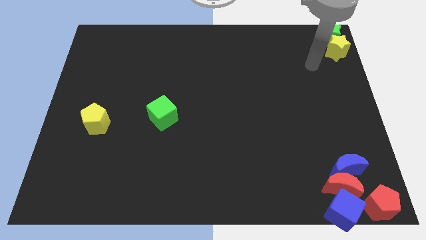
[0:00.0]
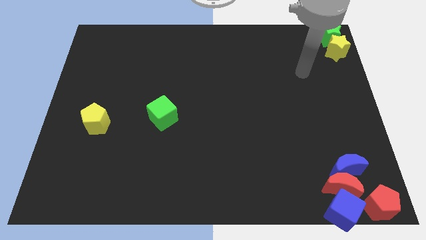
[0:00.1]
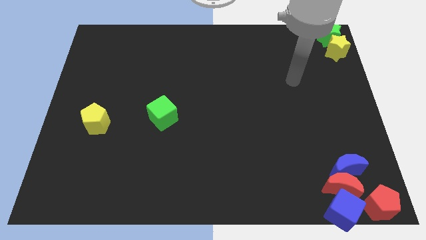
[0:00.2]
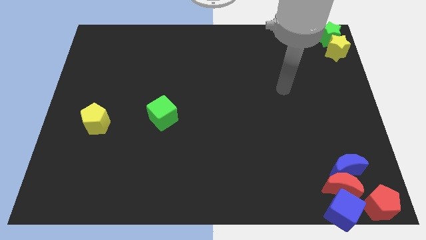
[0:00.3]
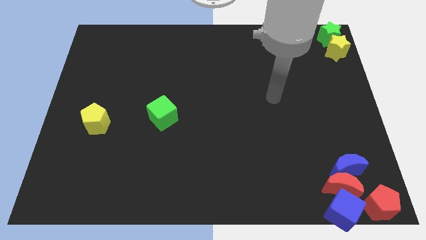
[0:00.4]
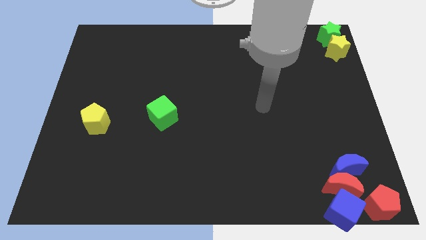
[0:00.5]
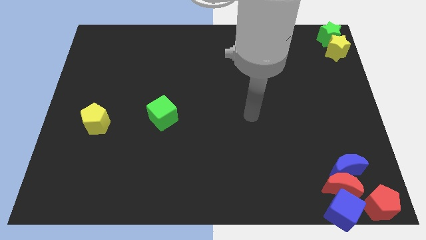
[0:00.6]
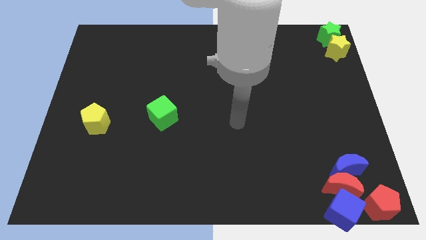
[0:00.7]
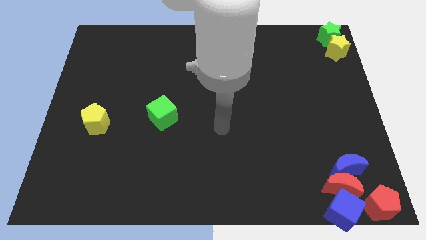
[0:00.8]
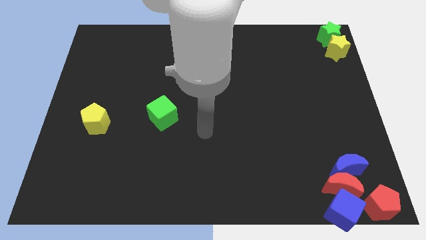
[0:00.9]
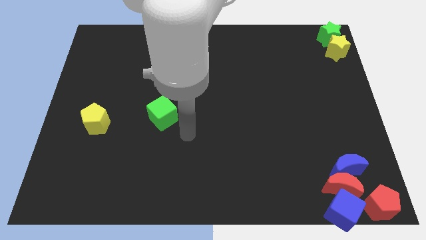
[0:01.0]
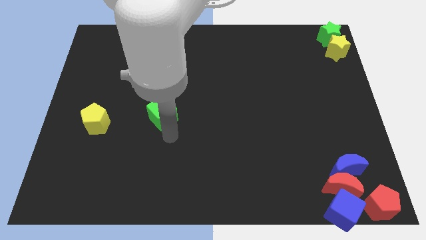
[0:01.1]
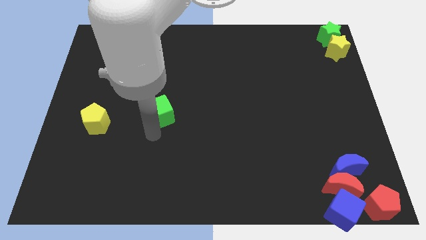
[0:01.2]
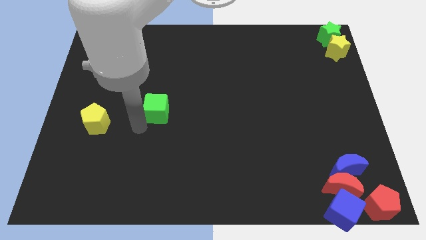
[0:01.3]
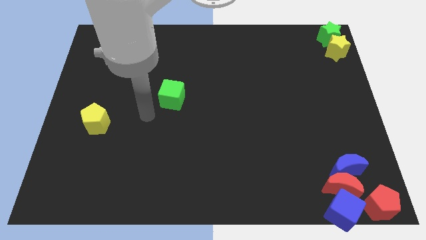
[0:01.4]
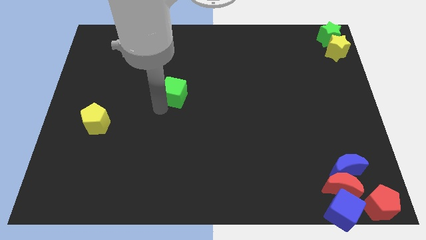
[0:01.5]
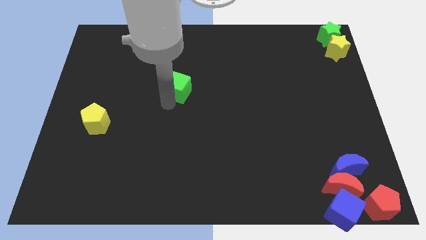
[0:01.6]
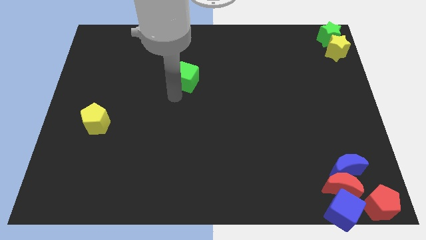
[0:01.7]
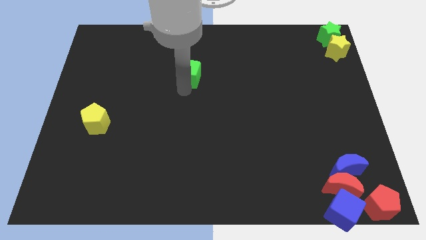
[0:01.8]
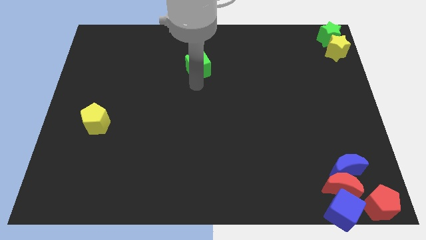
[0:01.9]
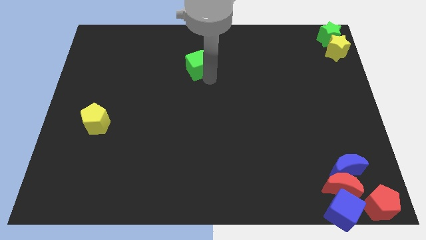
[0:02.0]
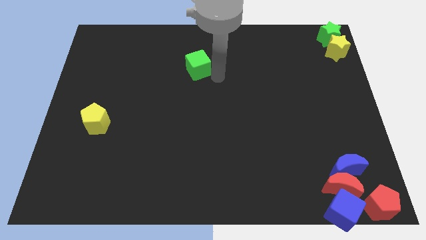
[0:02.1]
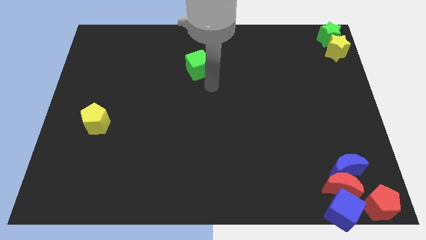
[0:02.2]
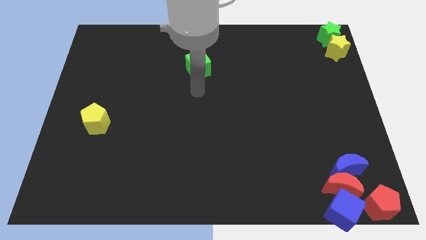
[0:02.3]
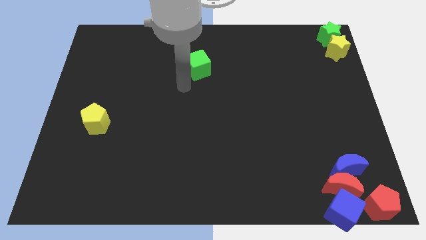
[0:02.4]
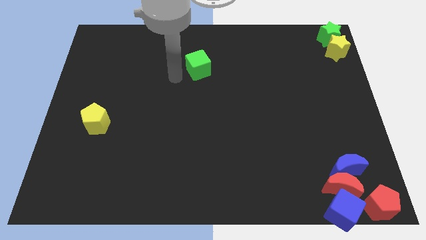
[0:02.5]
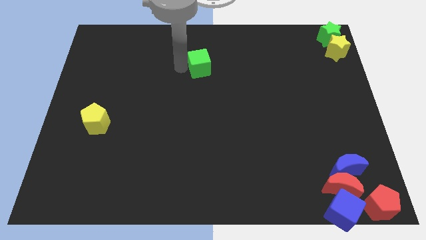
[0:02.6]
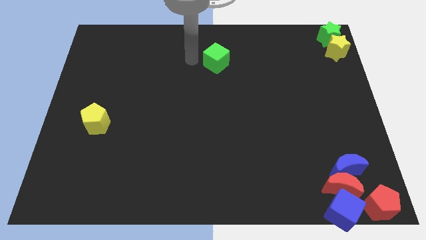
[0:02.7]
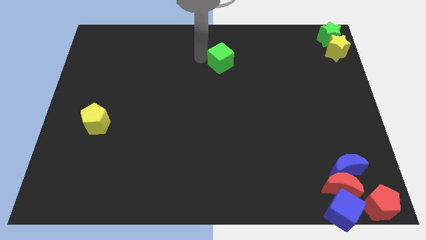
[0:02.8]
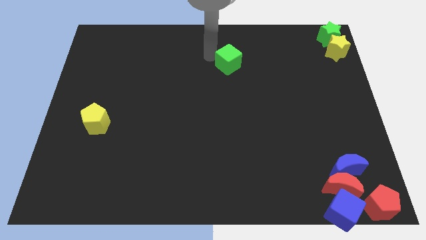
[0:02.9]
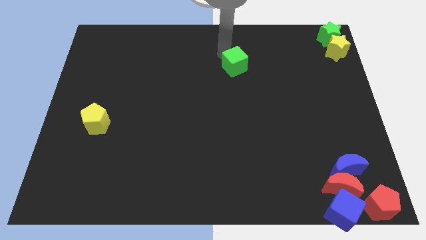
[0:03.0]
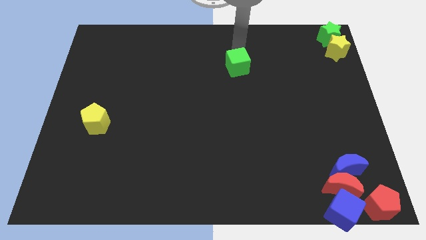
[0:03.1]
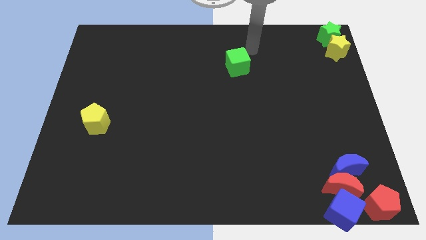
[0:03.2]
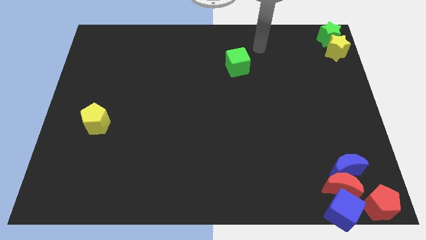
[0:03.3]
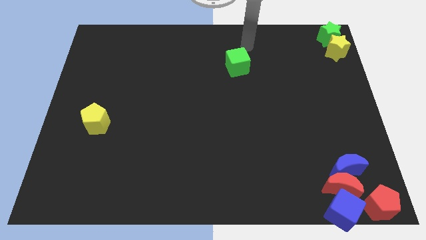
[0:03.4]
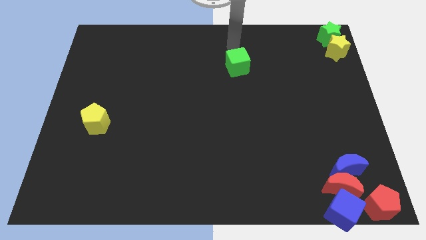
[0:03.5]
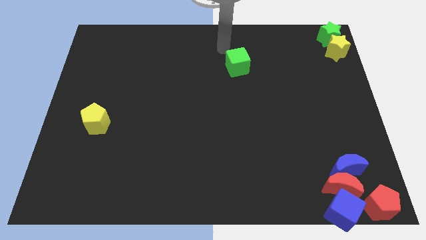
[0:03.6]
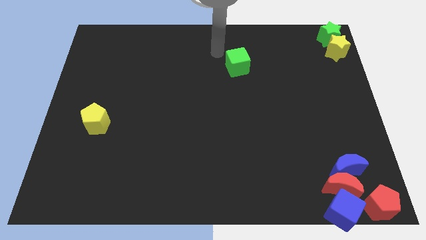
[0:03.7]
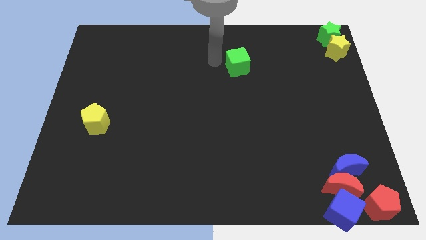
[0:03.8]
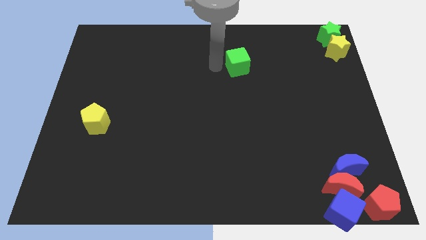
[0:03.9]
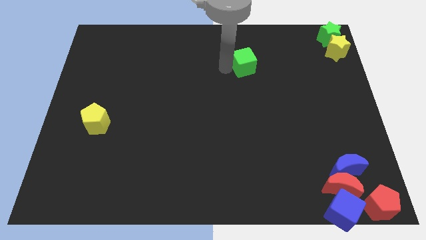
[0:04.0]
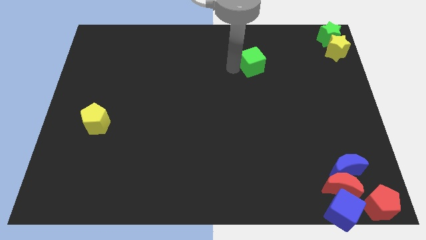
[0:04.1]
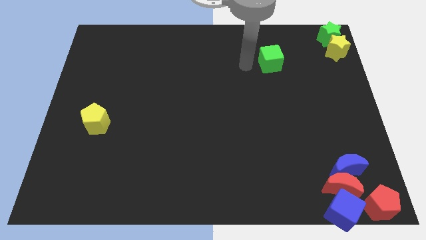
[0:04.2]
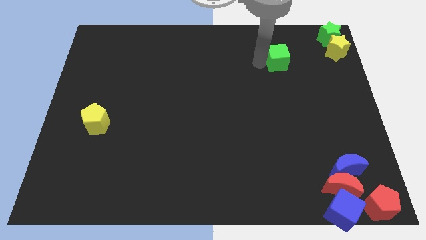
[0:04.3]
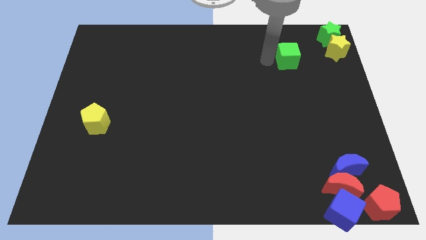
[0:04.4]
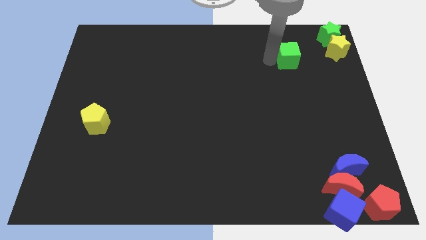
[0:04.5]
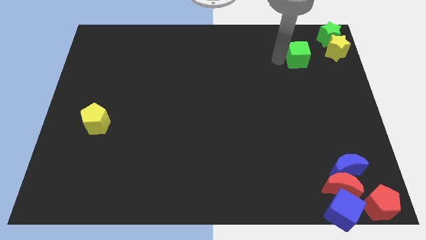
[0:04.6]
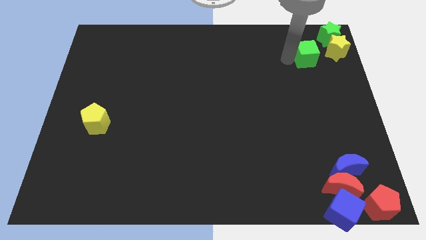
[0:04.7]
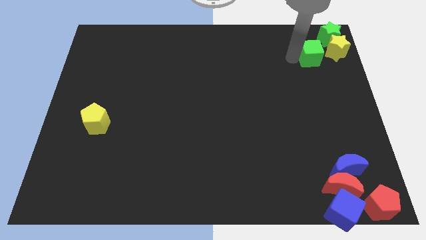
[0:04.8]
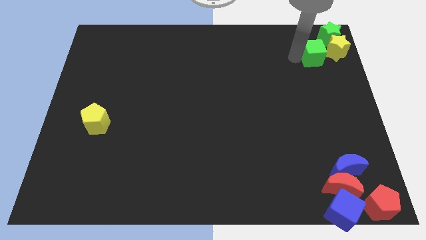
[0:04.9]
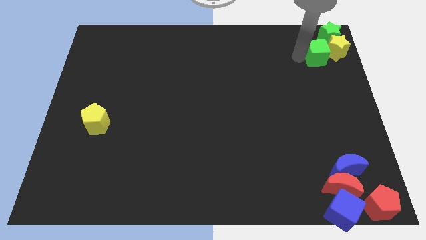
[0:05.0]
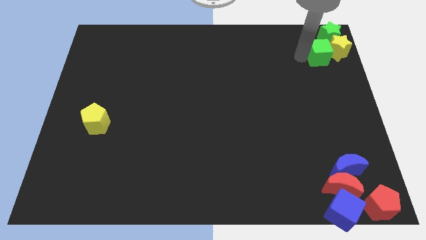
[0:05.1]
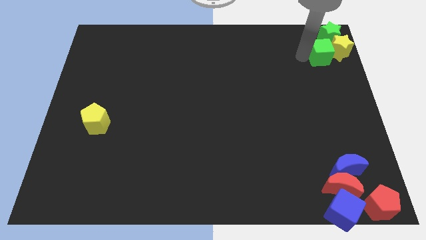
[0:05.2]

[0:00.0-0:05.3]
move the green cube into the left side of the yellow star

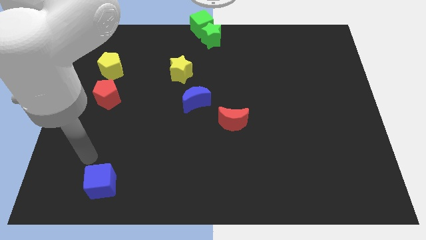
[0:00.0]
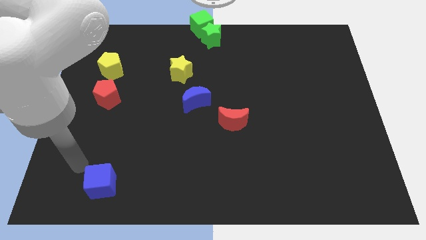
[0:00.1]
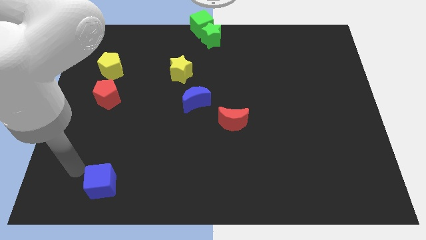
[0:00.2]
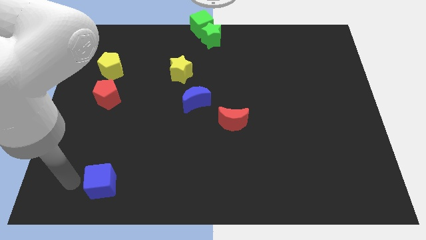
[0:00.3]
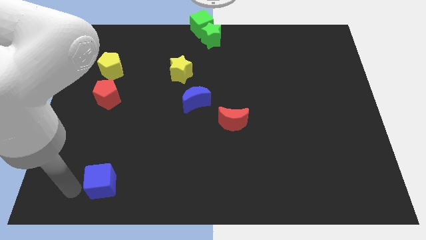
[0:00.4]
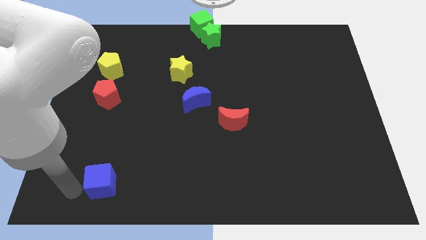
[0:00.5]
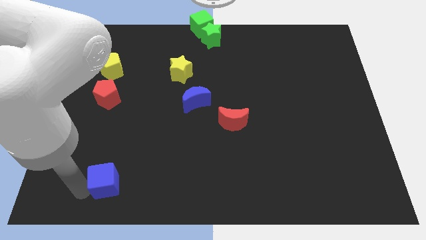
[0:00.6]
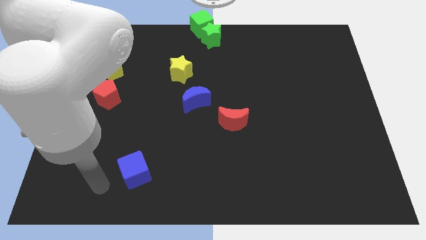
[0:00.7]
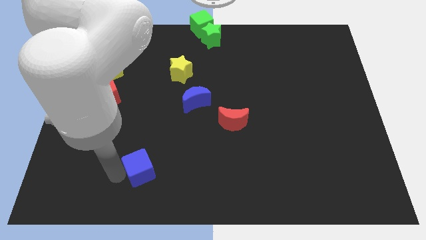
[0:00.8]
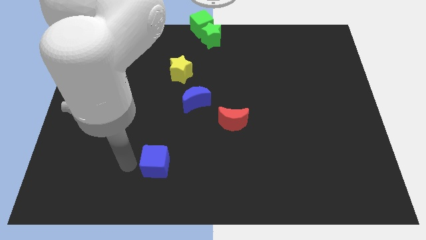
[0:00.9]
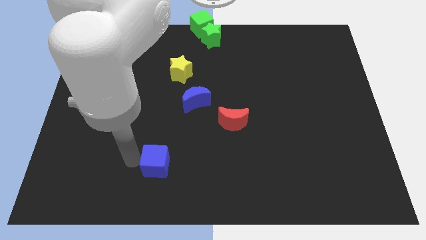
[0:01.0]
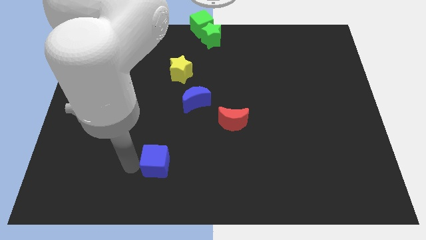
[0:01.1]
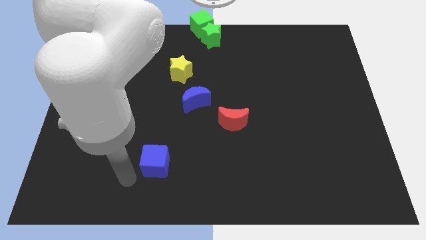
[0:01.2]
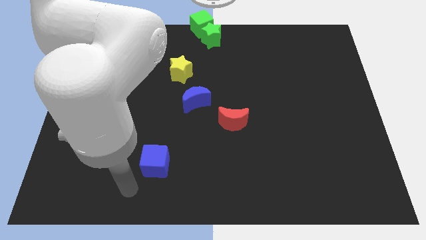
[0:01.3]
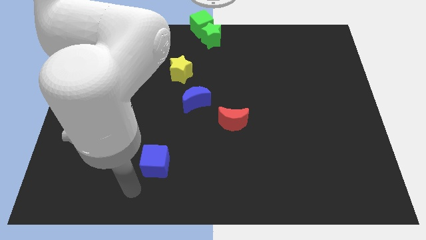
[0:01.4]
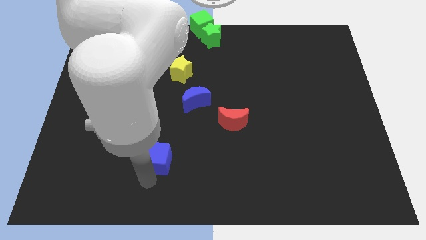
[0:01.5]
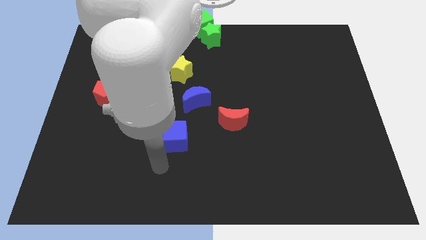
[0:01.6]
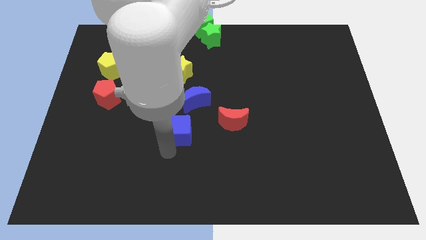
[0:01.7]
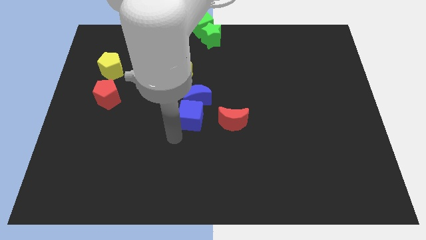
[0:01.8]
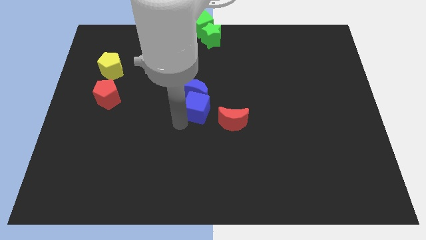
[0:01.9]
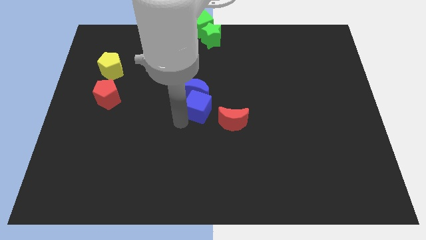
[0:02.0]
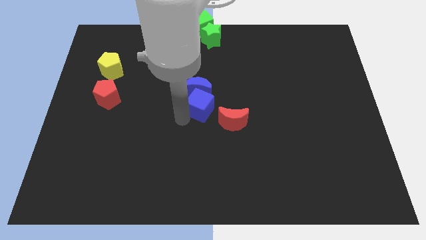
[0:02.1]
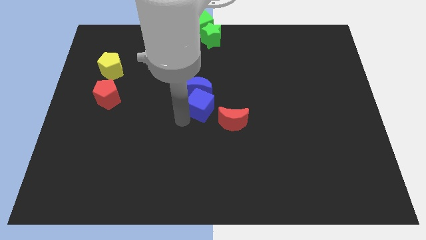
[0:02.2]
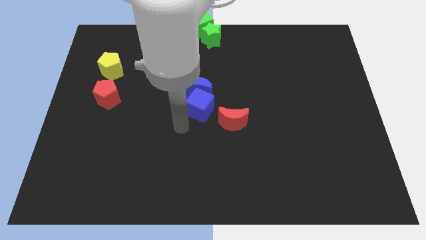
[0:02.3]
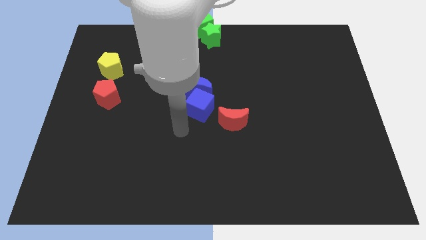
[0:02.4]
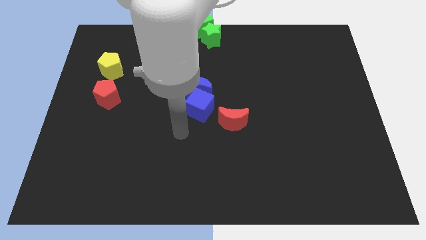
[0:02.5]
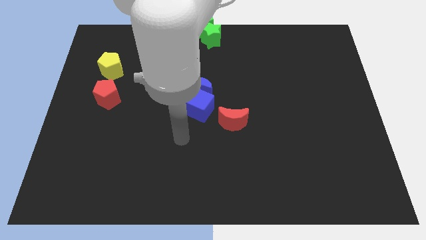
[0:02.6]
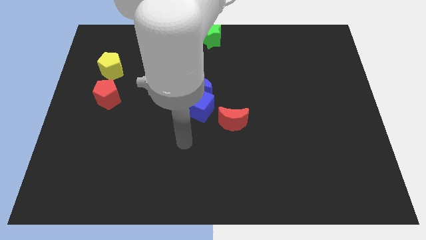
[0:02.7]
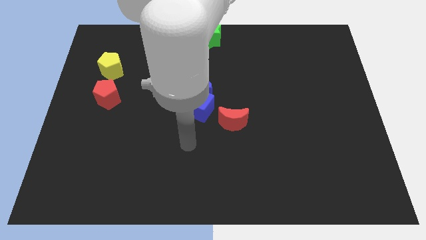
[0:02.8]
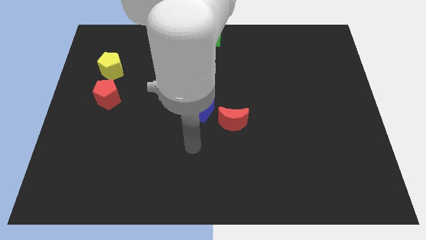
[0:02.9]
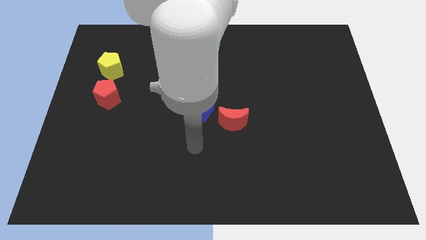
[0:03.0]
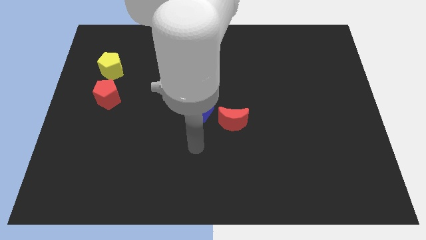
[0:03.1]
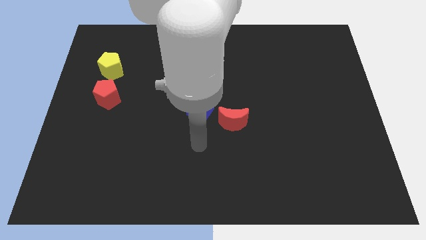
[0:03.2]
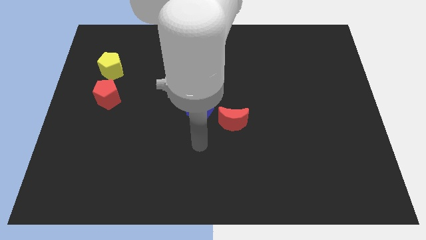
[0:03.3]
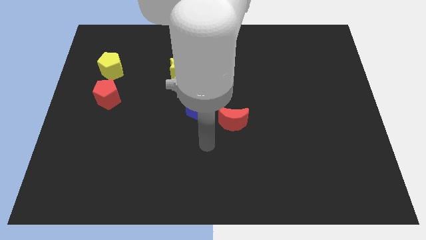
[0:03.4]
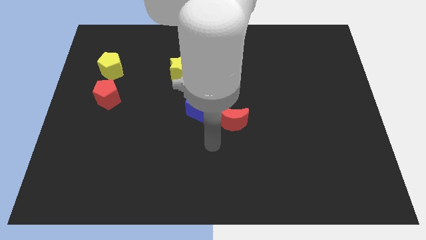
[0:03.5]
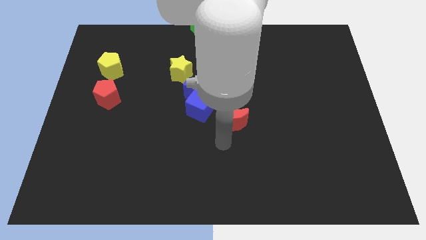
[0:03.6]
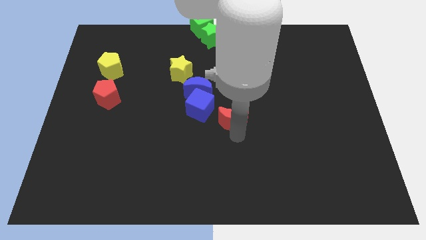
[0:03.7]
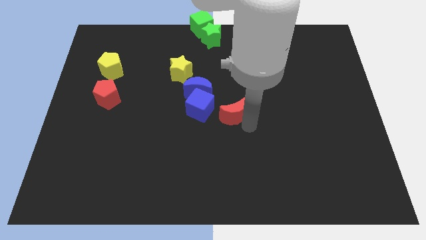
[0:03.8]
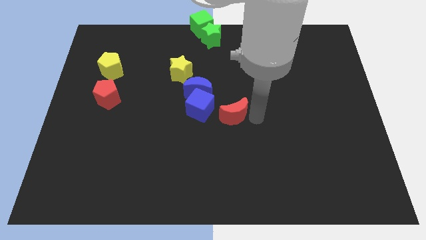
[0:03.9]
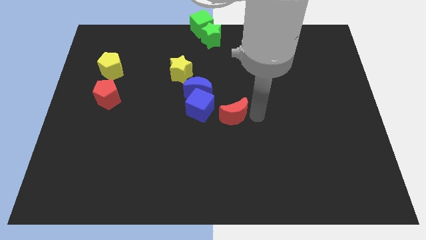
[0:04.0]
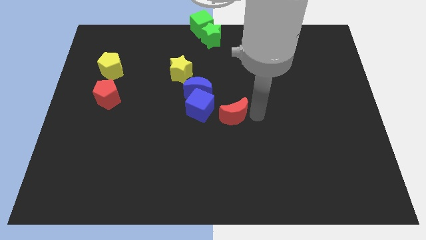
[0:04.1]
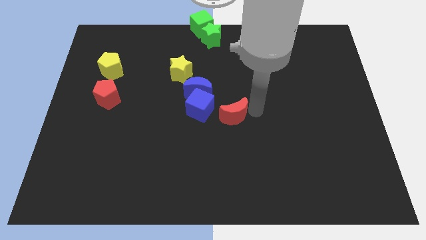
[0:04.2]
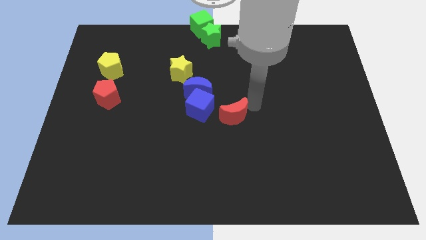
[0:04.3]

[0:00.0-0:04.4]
push the blue cube to the center of the board
